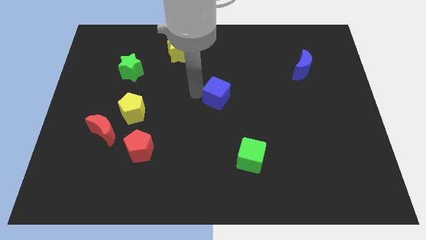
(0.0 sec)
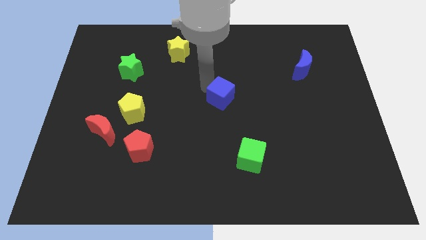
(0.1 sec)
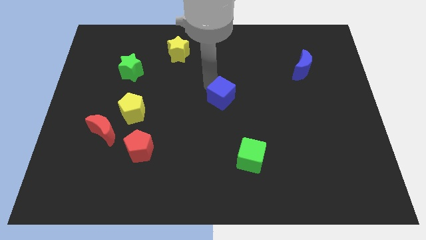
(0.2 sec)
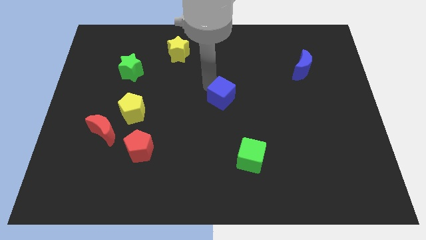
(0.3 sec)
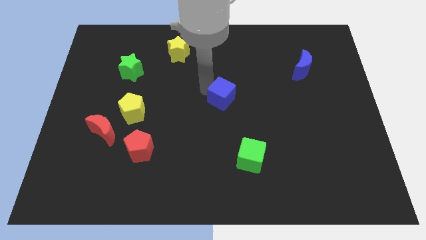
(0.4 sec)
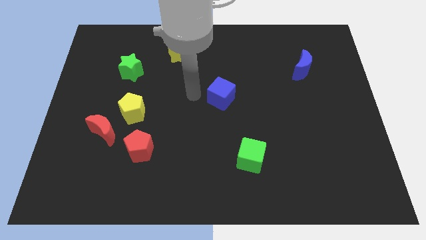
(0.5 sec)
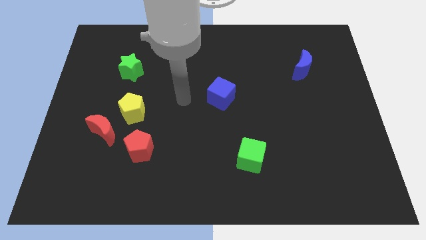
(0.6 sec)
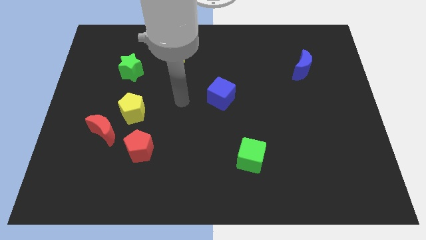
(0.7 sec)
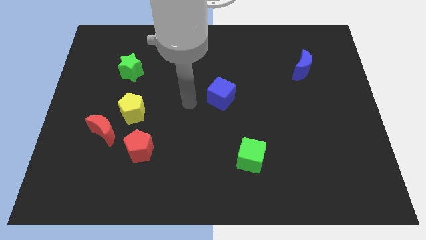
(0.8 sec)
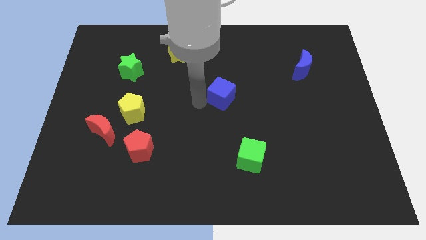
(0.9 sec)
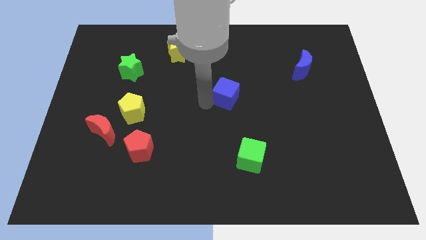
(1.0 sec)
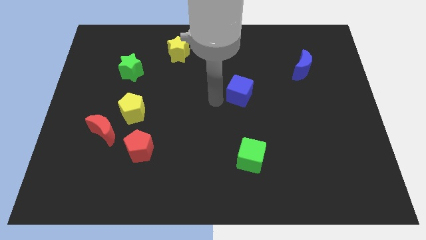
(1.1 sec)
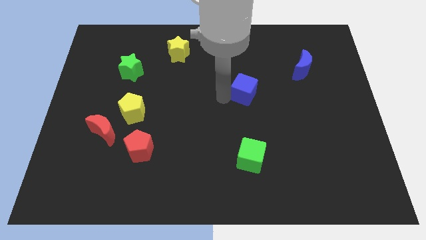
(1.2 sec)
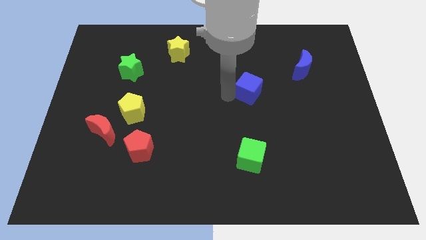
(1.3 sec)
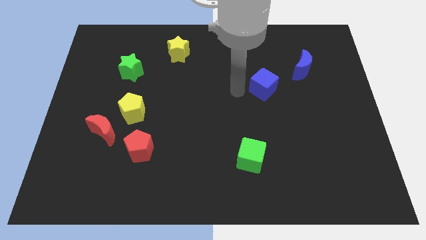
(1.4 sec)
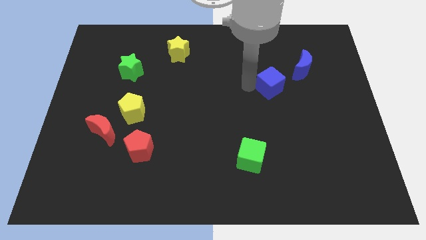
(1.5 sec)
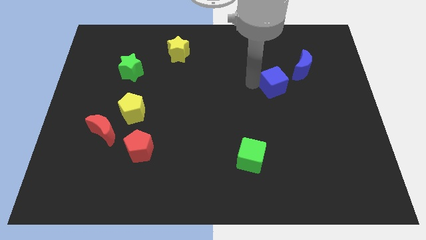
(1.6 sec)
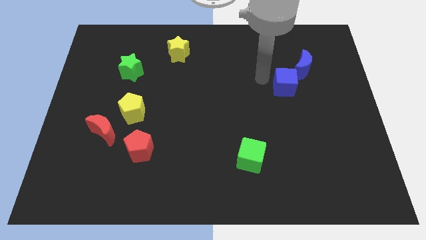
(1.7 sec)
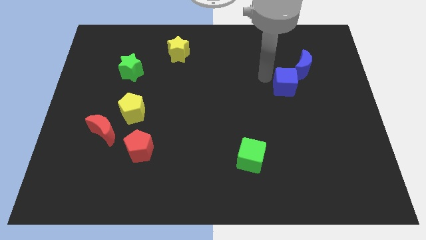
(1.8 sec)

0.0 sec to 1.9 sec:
move the blue cube towards the blue crescent

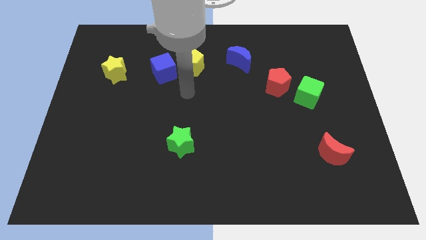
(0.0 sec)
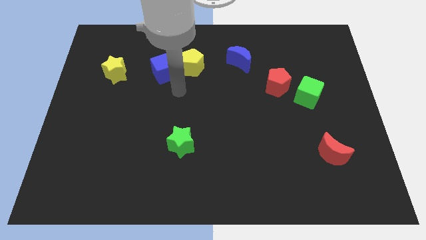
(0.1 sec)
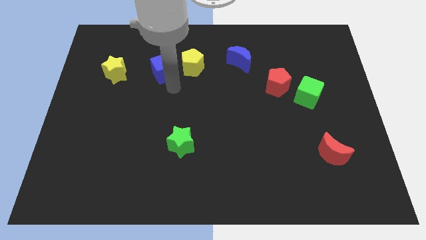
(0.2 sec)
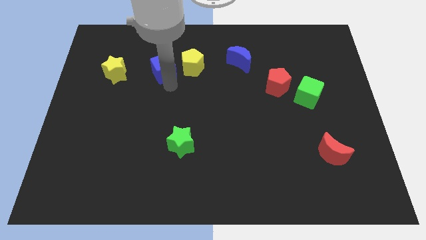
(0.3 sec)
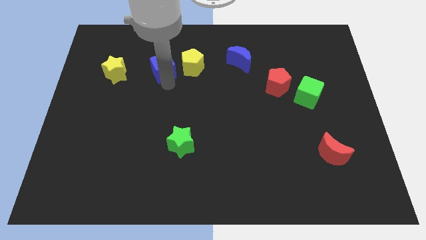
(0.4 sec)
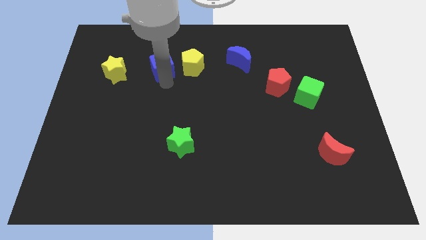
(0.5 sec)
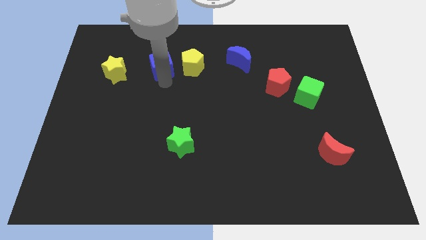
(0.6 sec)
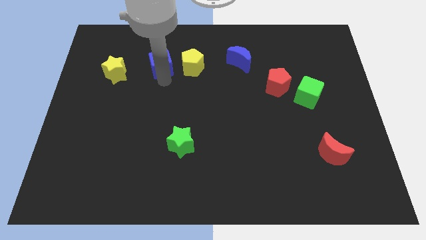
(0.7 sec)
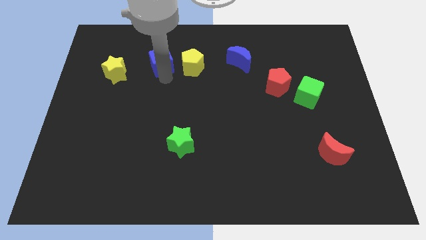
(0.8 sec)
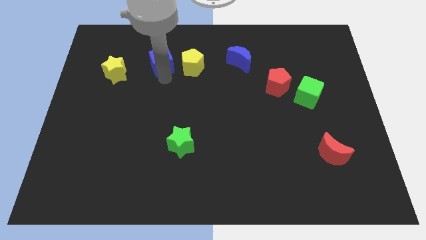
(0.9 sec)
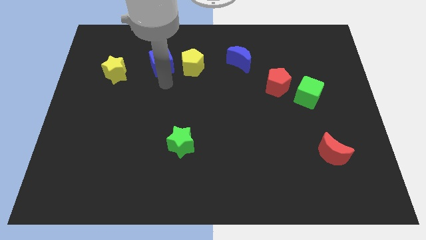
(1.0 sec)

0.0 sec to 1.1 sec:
push the blue cube upwards slightly

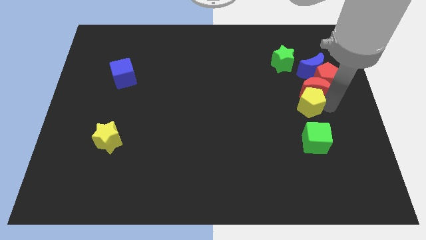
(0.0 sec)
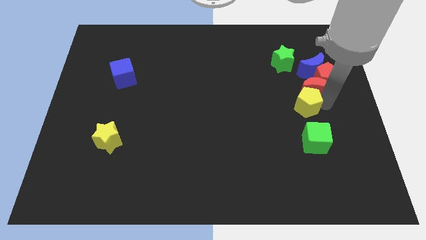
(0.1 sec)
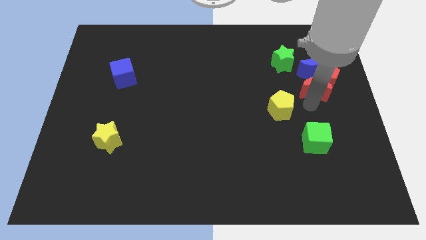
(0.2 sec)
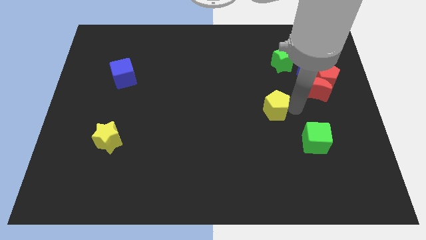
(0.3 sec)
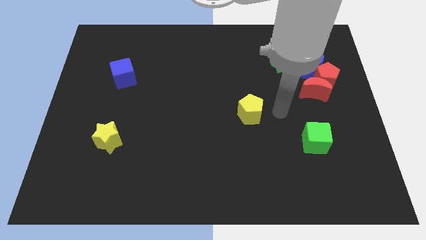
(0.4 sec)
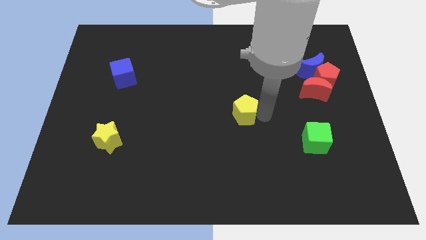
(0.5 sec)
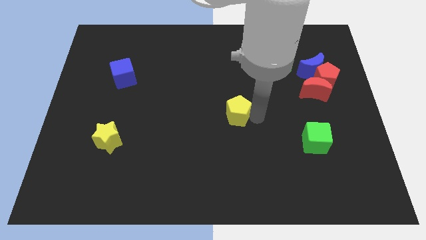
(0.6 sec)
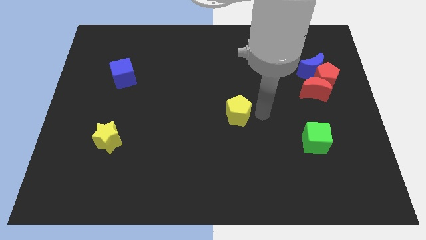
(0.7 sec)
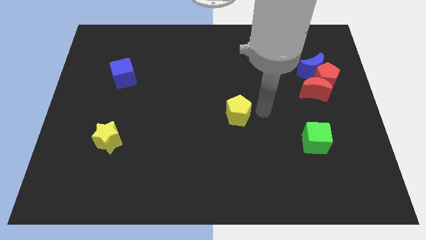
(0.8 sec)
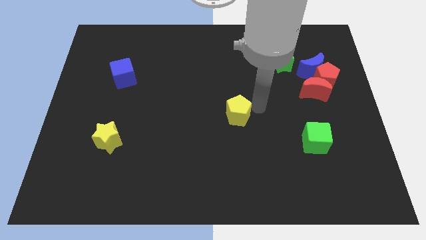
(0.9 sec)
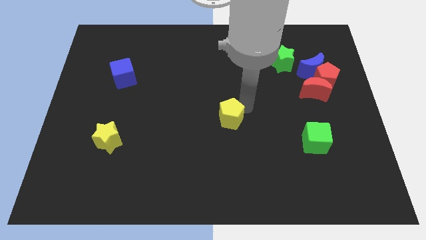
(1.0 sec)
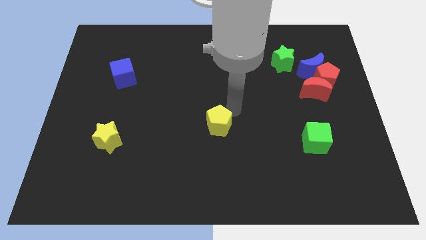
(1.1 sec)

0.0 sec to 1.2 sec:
place the yellow pentagon at the center of the board

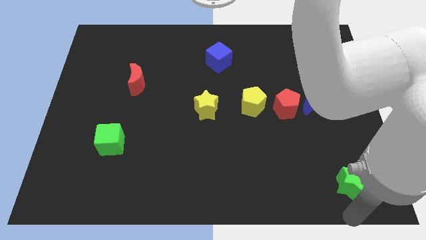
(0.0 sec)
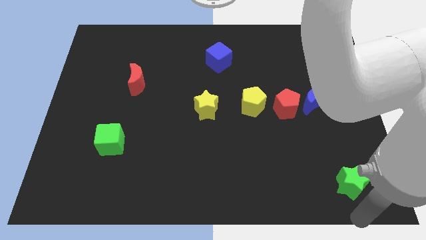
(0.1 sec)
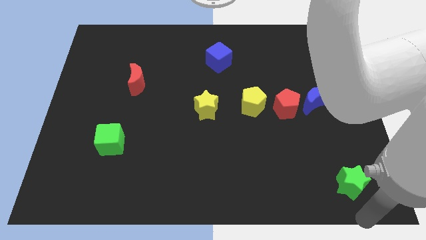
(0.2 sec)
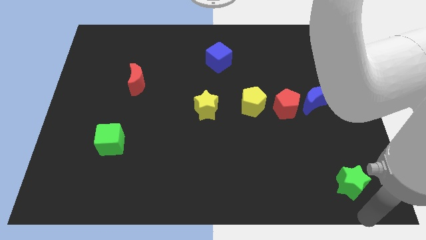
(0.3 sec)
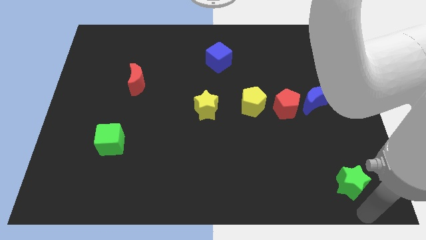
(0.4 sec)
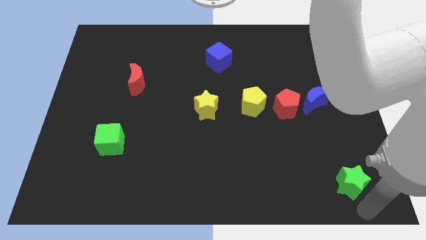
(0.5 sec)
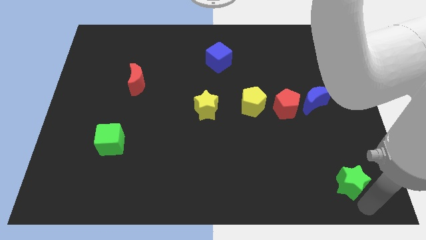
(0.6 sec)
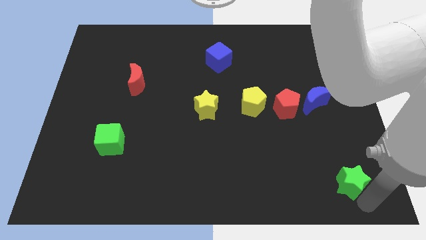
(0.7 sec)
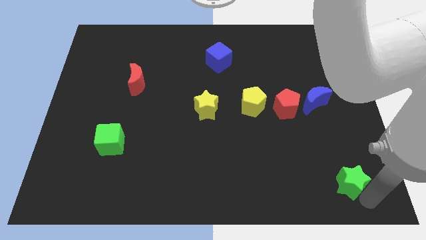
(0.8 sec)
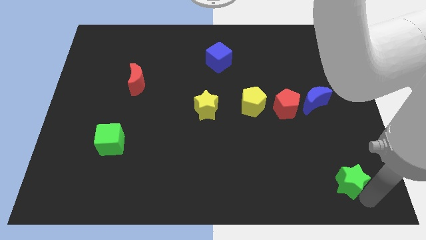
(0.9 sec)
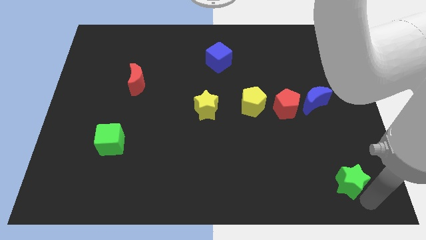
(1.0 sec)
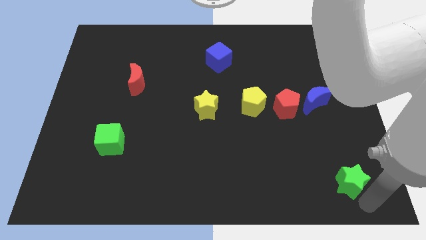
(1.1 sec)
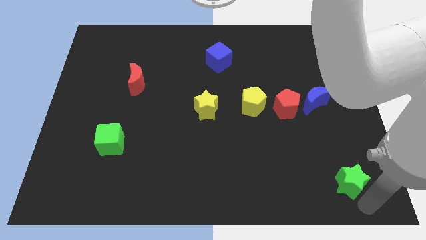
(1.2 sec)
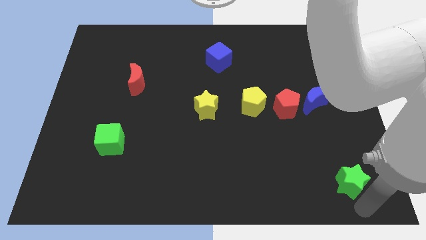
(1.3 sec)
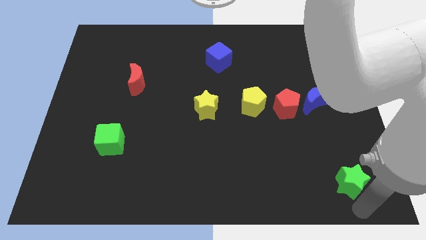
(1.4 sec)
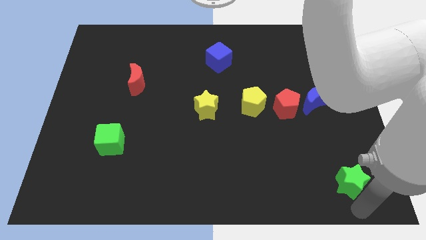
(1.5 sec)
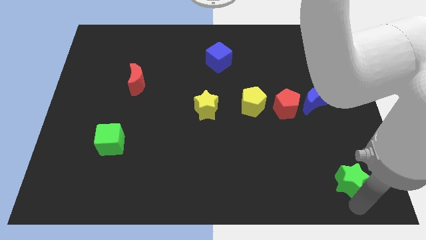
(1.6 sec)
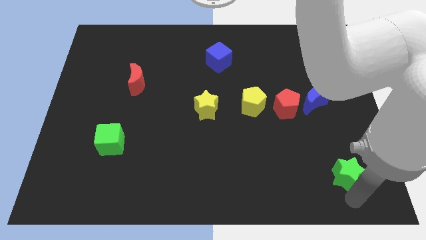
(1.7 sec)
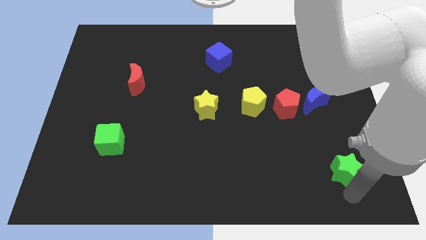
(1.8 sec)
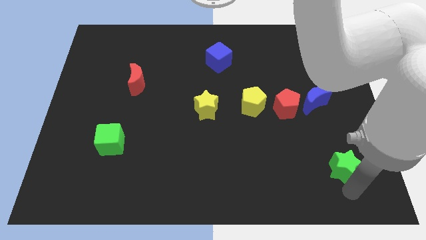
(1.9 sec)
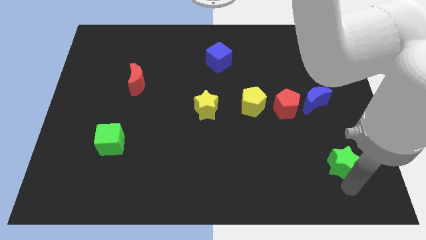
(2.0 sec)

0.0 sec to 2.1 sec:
move the green star slightly up

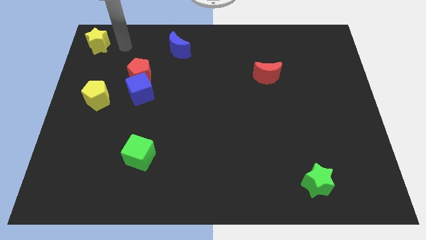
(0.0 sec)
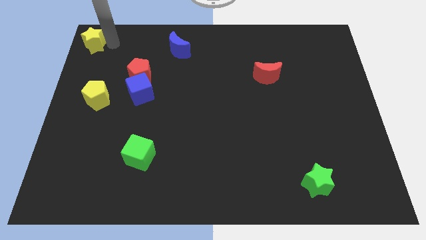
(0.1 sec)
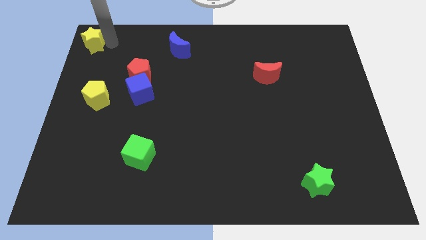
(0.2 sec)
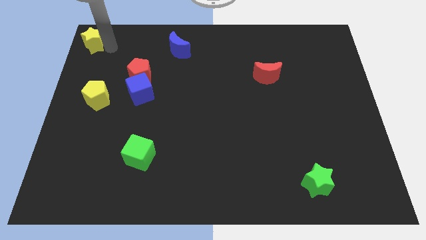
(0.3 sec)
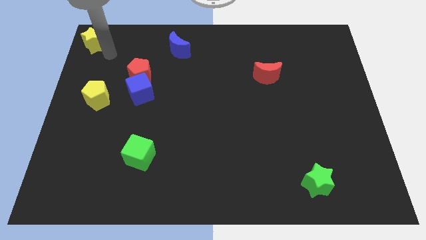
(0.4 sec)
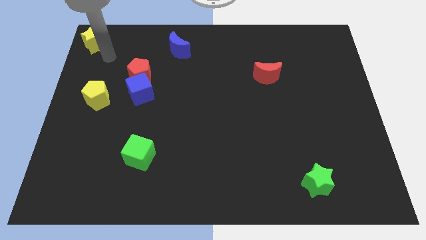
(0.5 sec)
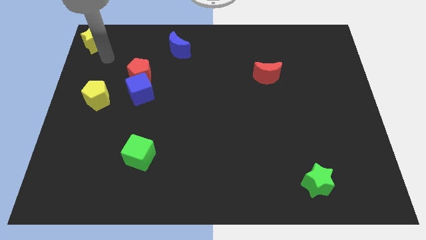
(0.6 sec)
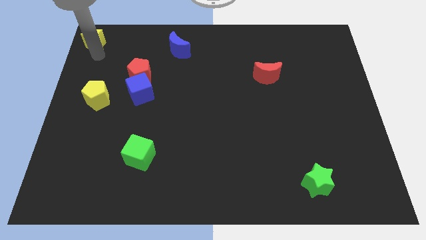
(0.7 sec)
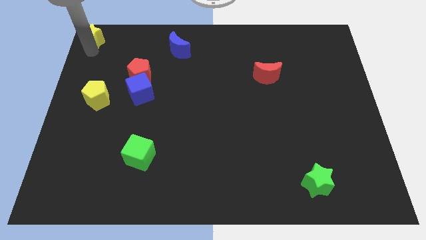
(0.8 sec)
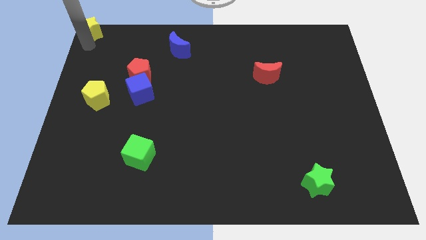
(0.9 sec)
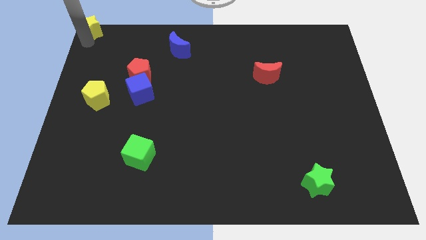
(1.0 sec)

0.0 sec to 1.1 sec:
move the yellow star to the top left corner of the board

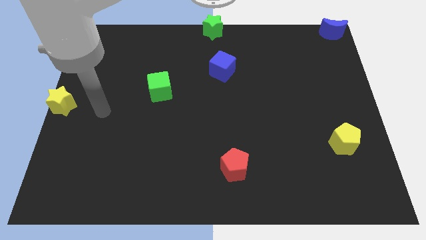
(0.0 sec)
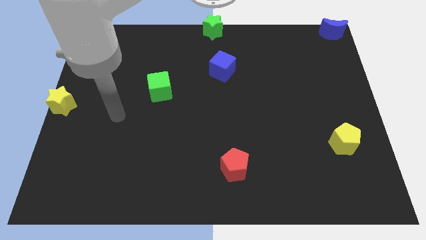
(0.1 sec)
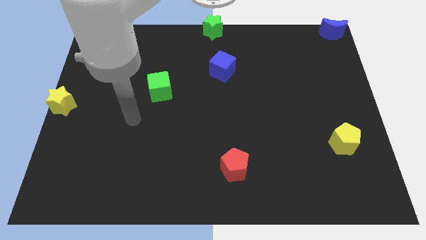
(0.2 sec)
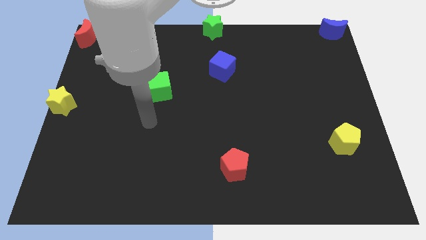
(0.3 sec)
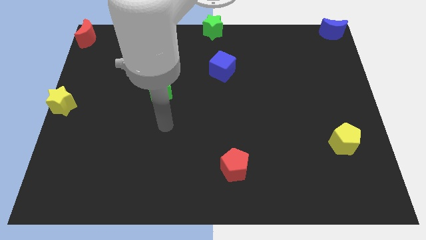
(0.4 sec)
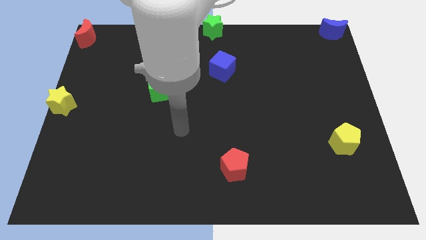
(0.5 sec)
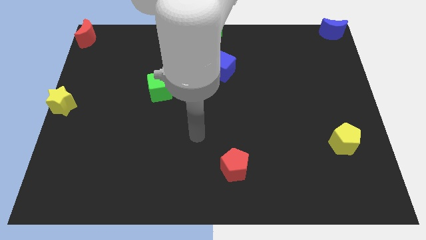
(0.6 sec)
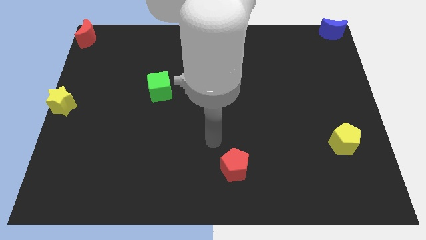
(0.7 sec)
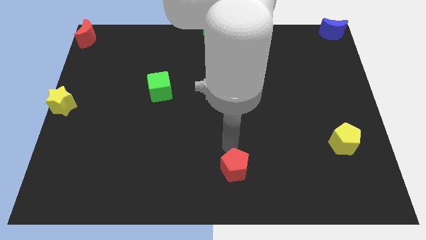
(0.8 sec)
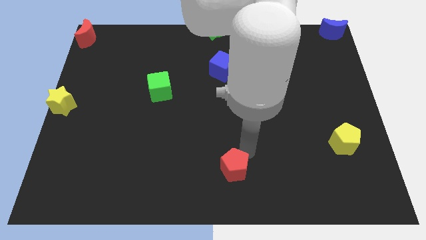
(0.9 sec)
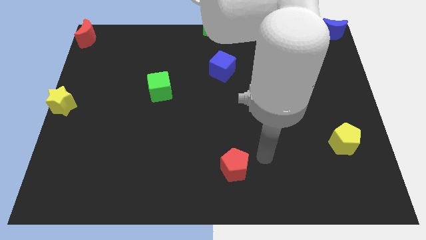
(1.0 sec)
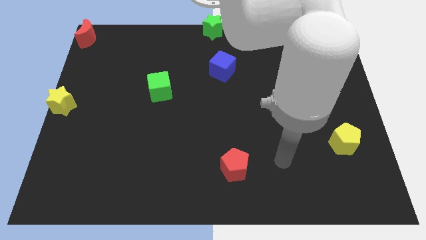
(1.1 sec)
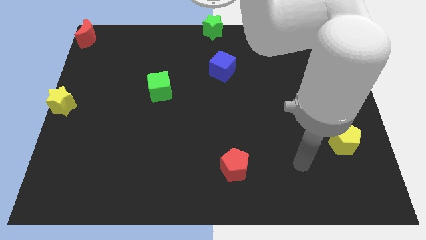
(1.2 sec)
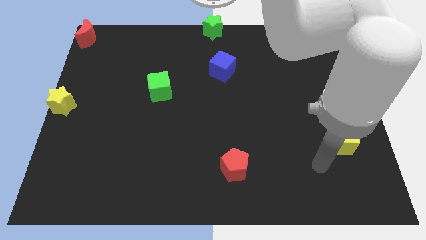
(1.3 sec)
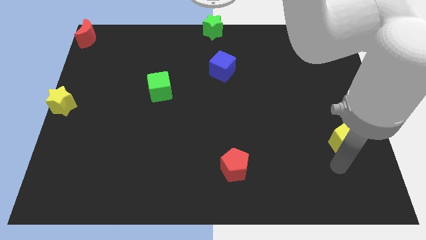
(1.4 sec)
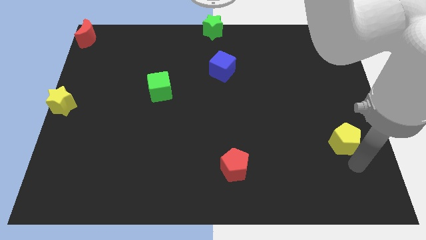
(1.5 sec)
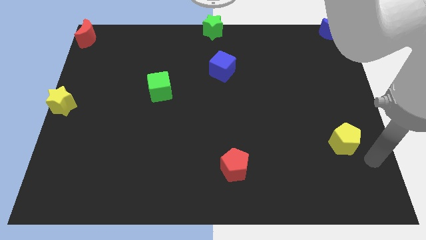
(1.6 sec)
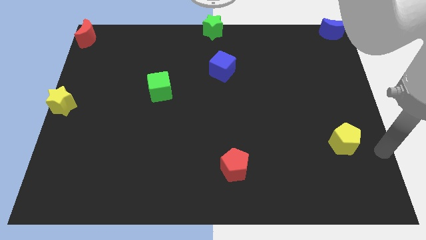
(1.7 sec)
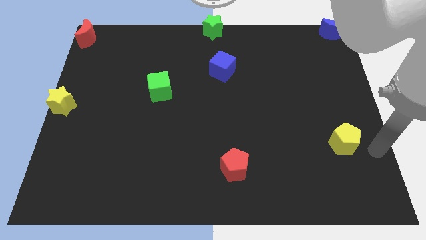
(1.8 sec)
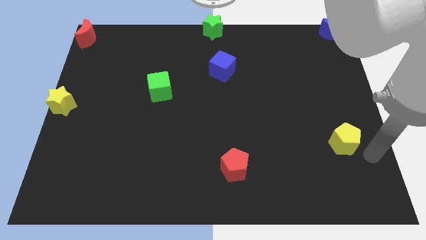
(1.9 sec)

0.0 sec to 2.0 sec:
move arm towards the bottom right of the board
